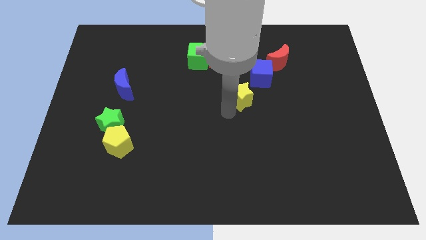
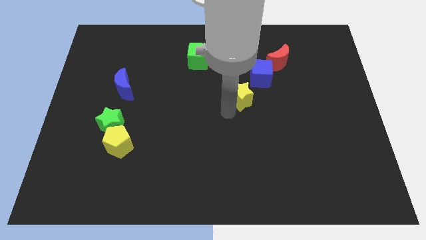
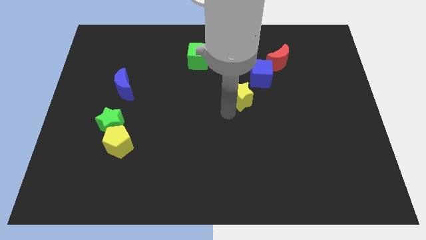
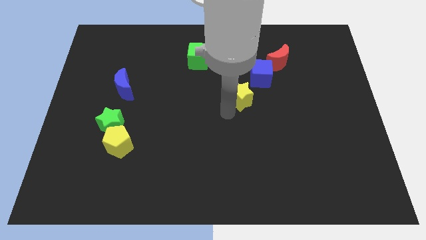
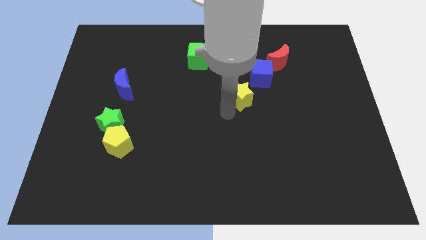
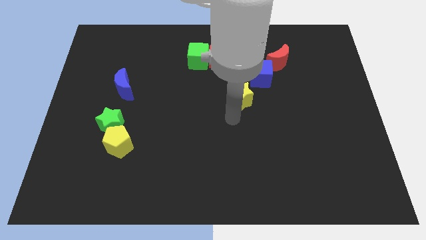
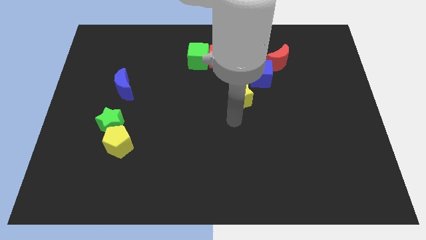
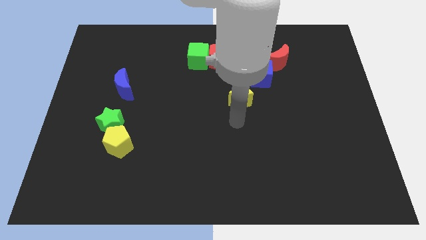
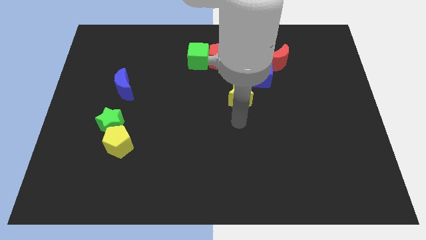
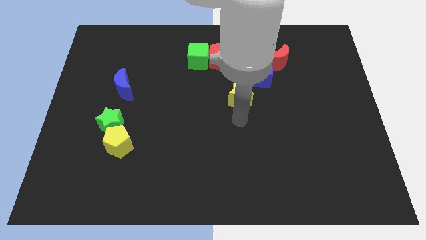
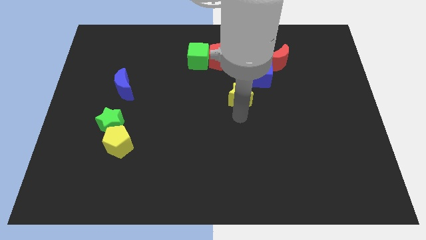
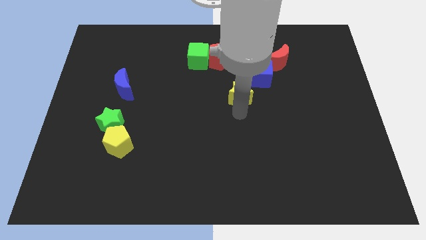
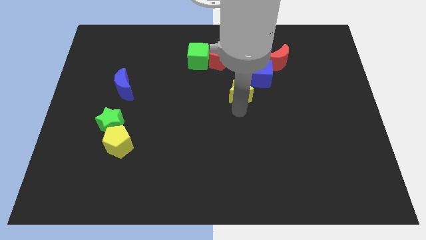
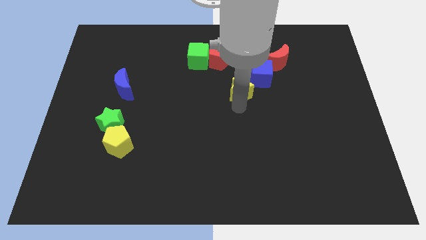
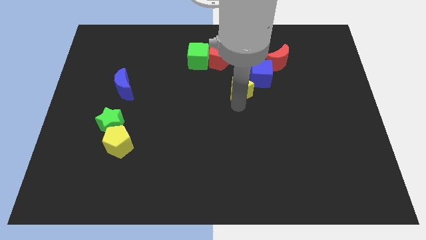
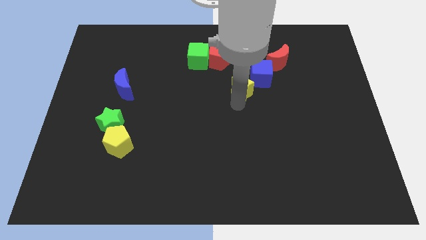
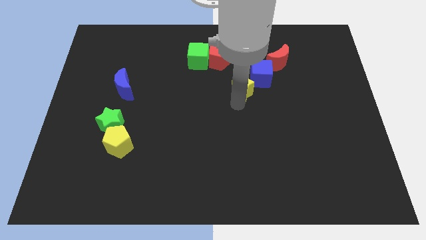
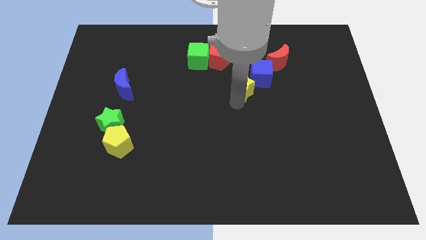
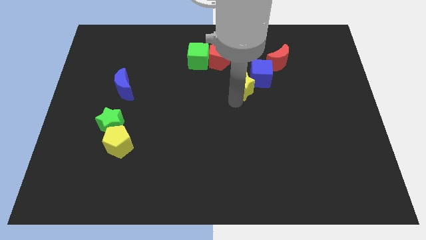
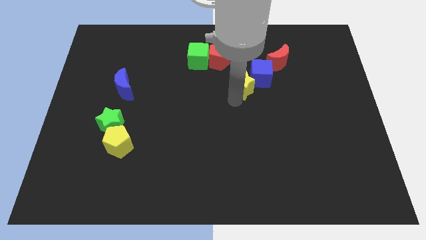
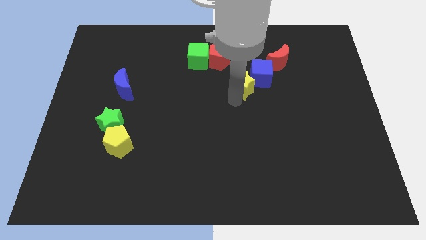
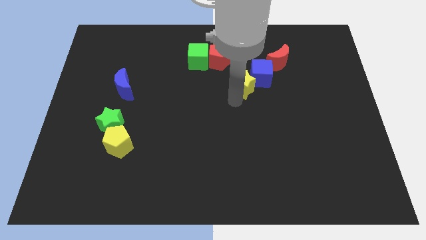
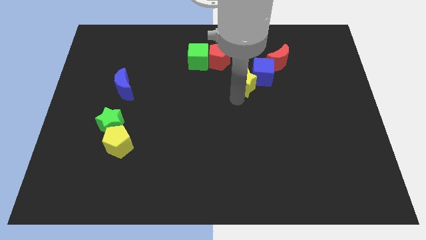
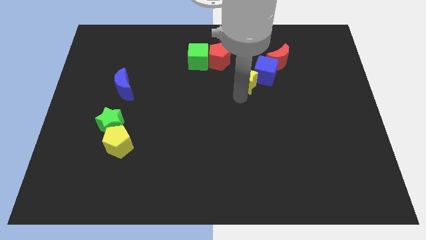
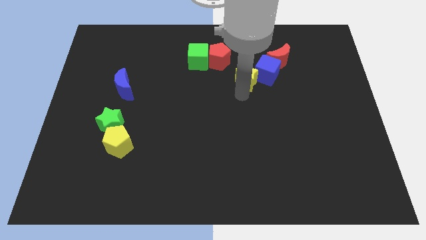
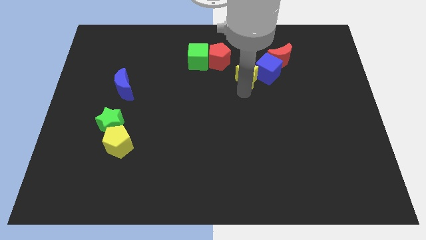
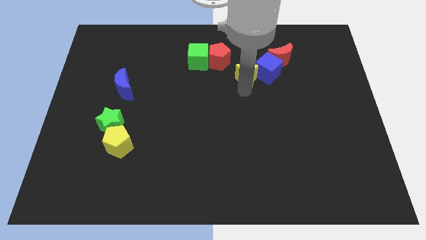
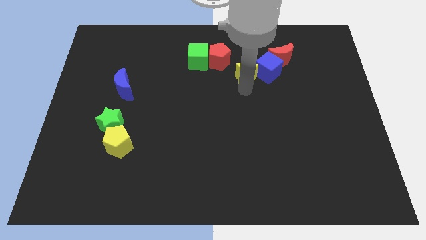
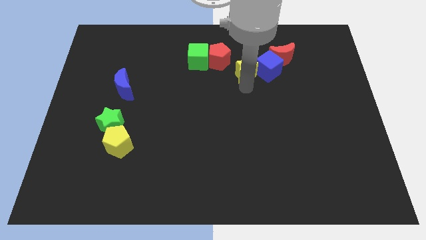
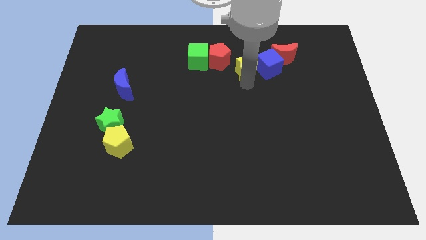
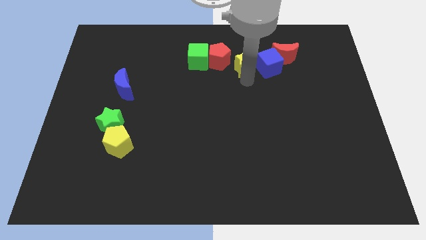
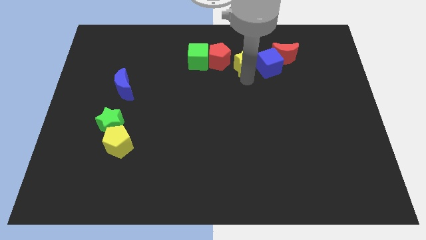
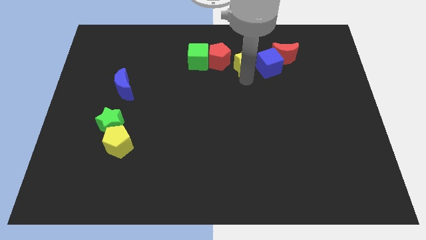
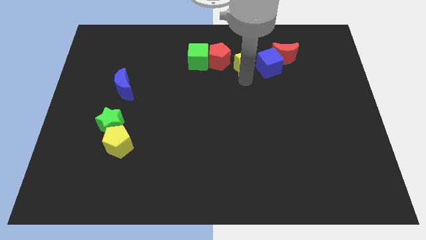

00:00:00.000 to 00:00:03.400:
push the yellow star to the left side of the blue cube

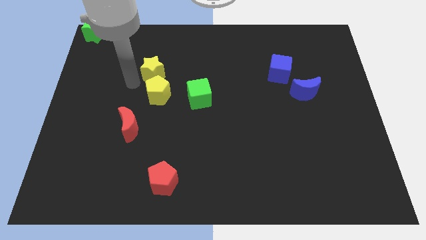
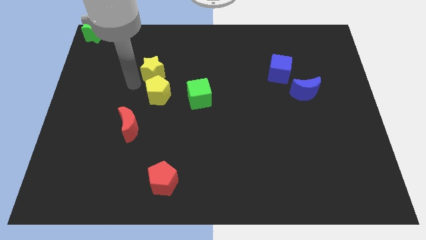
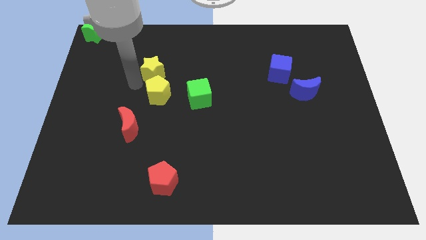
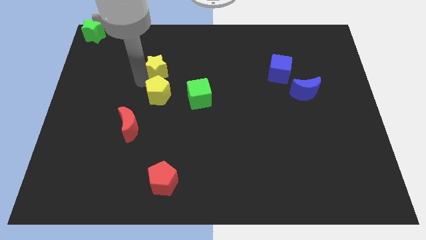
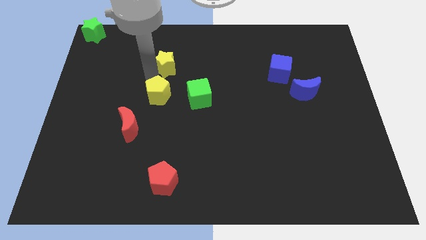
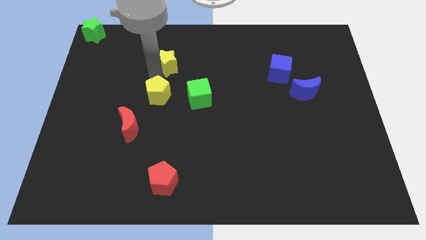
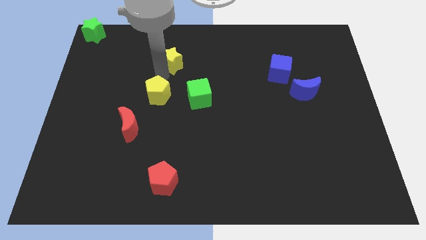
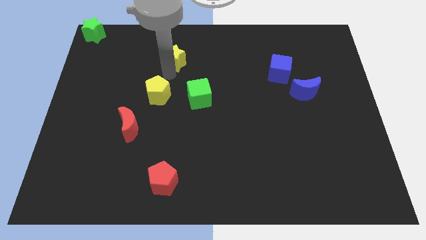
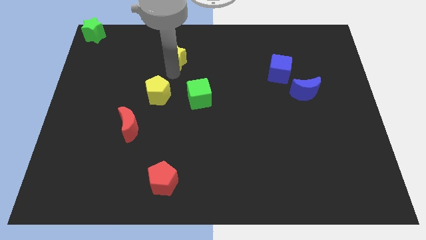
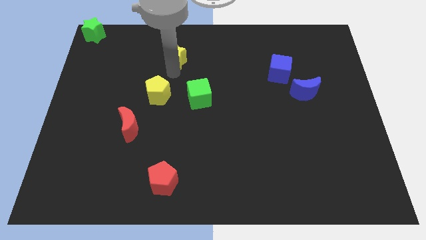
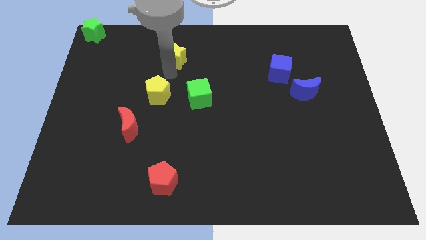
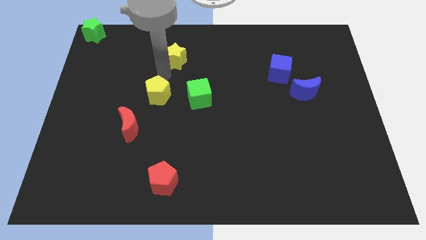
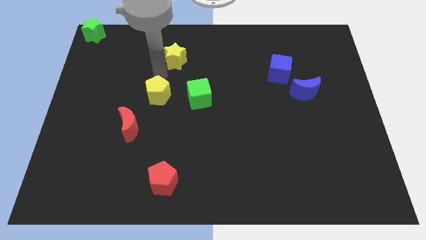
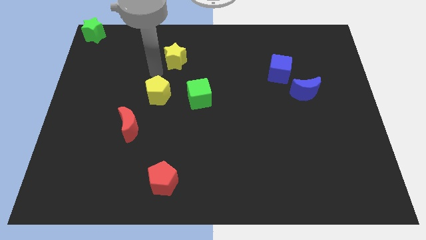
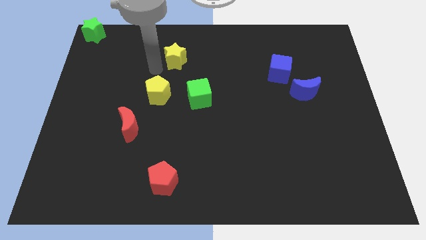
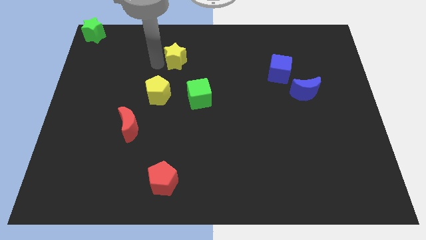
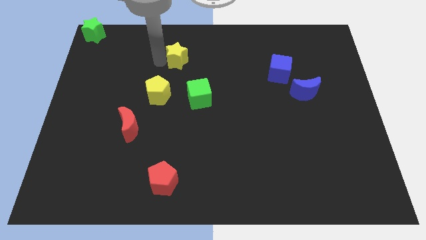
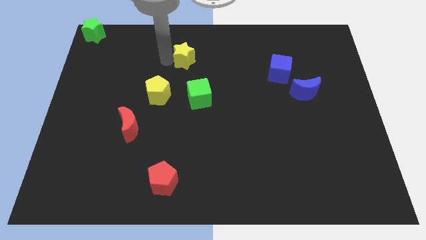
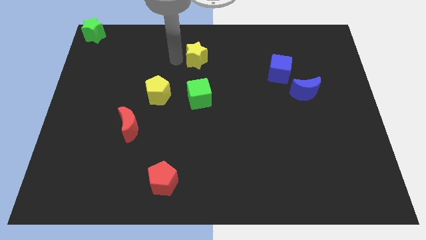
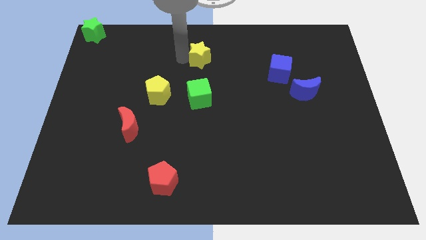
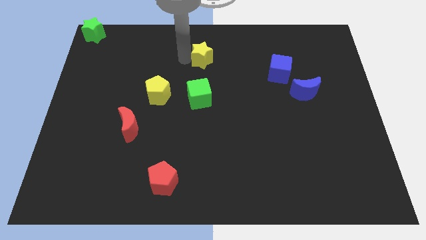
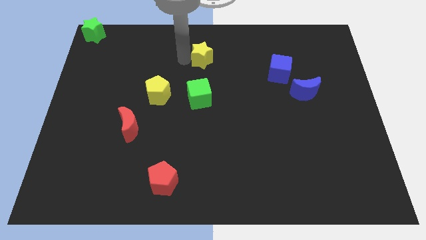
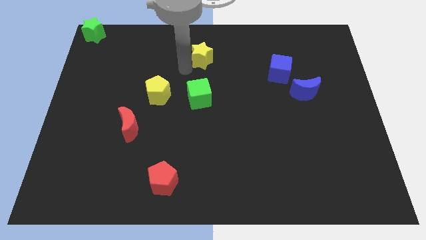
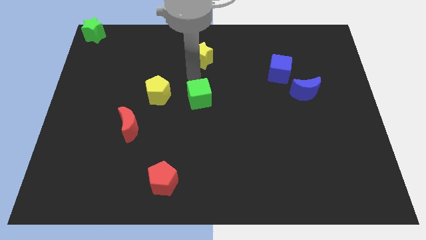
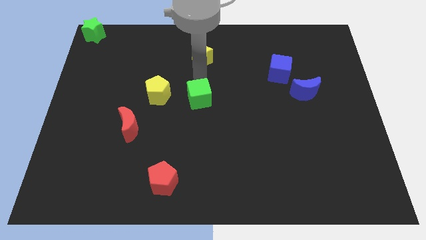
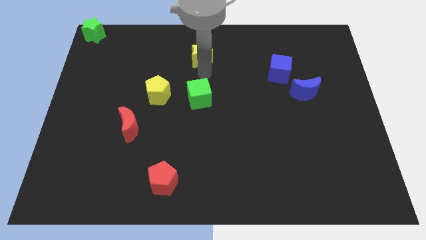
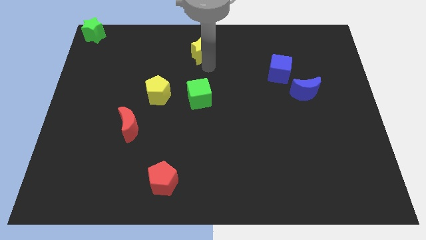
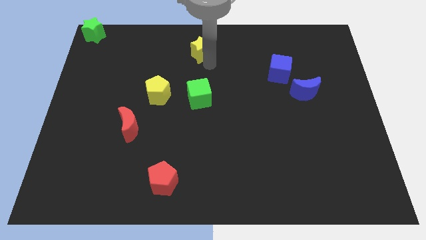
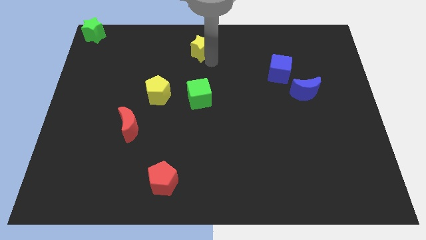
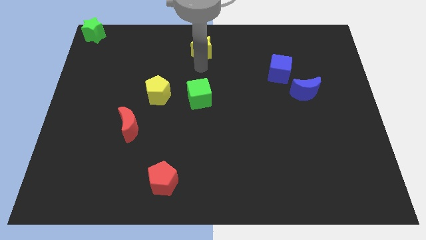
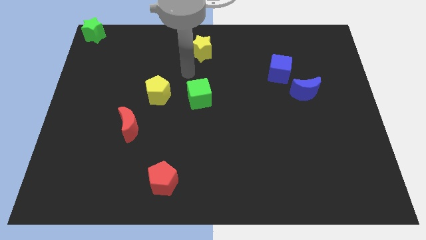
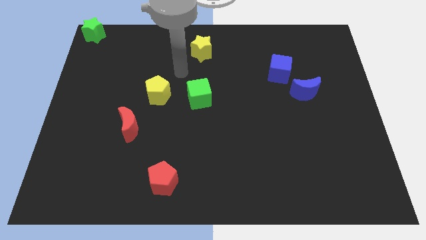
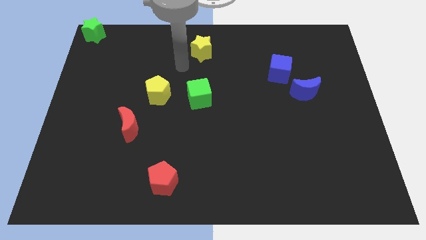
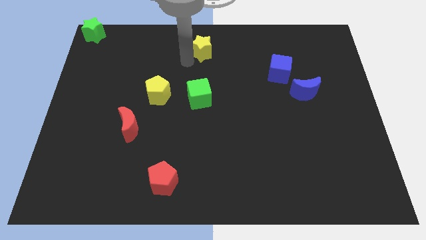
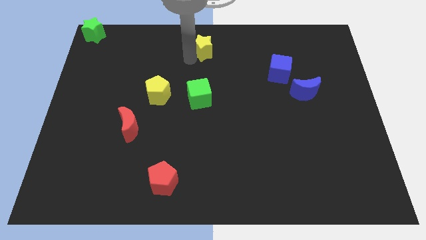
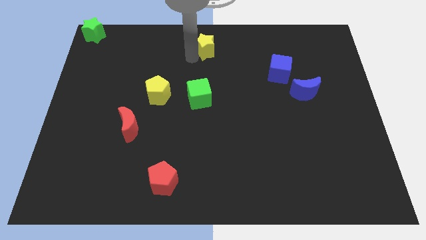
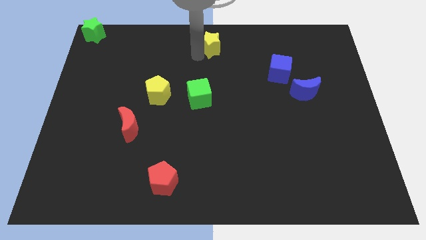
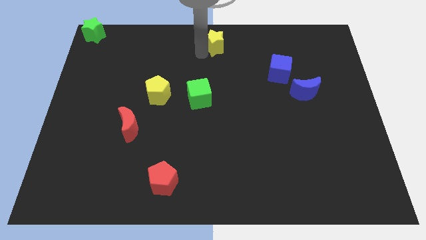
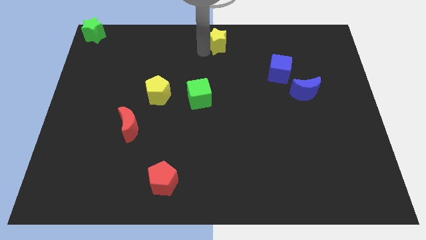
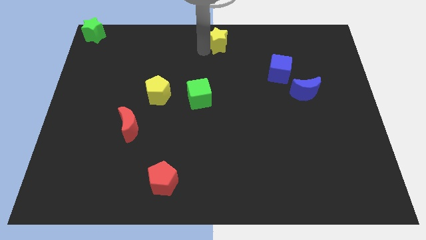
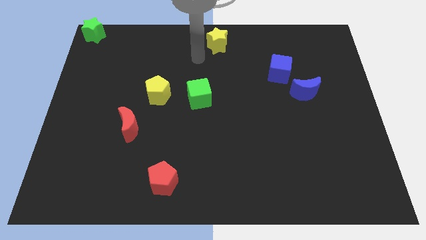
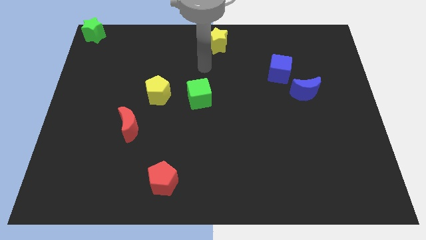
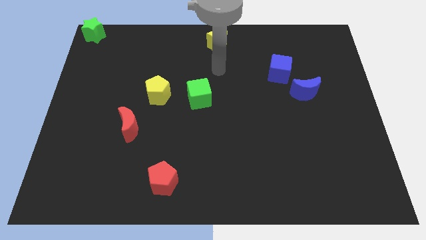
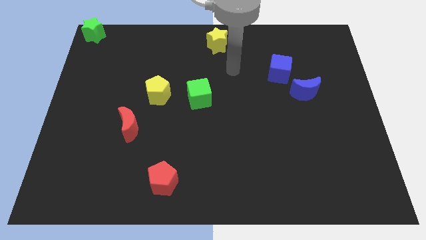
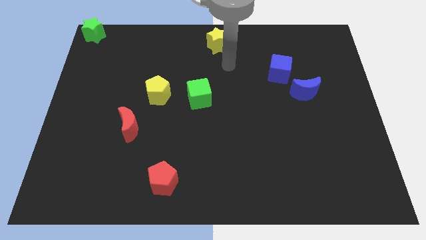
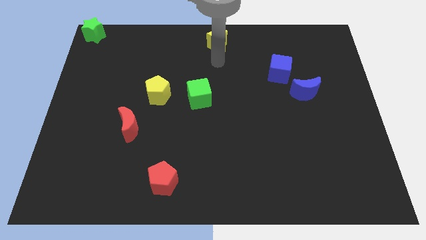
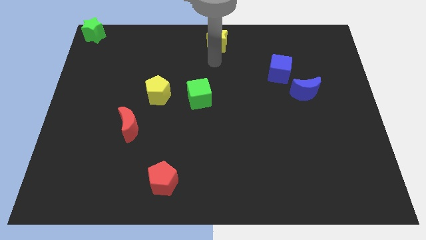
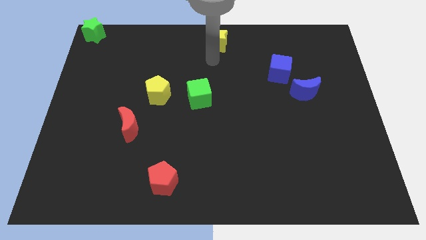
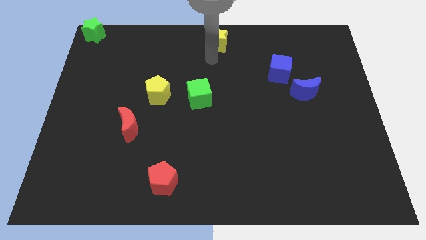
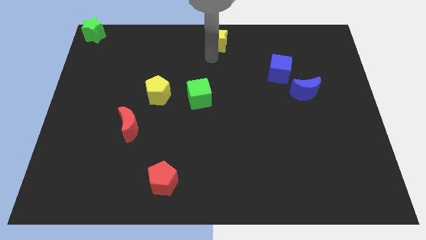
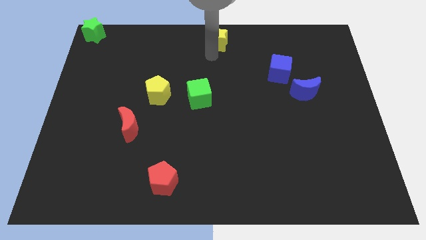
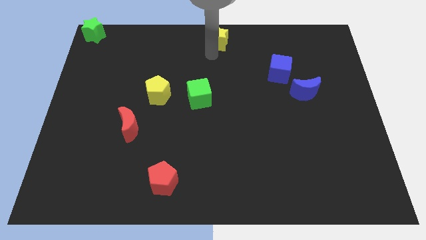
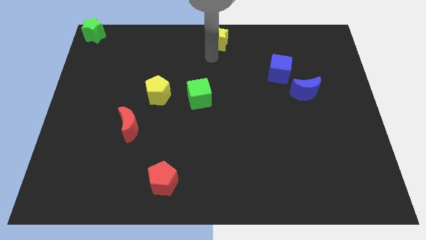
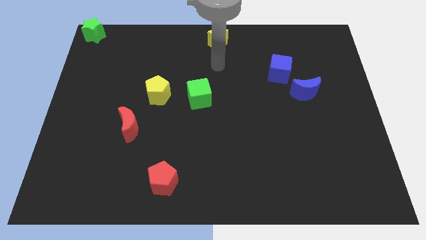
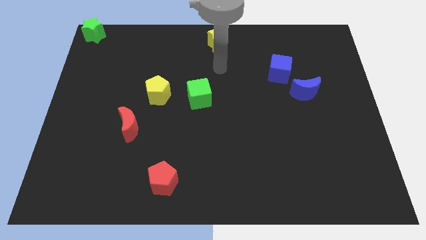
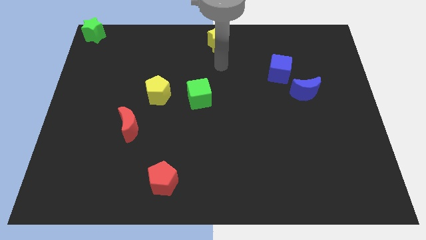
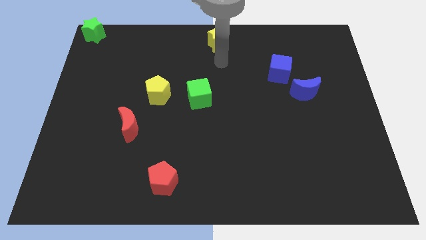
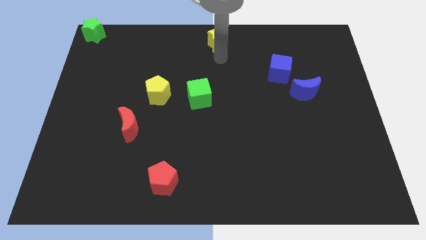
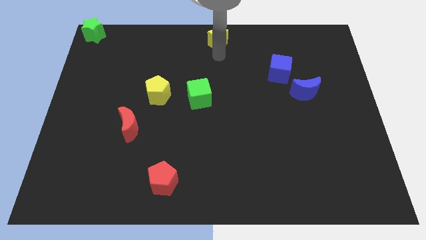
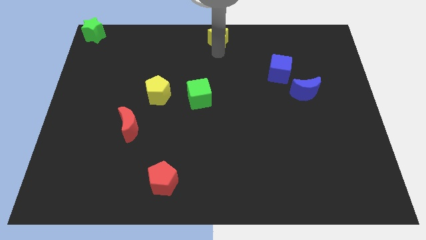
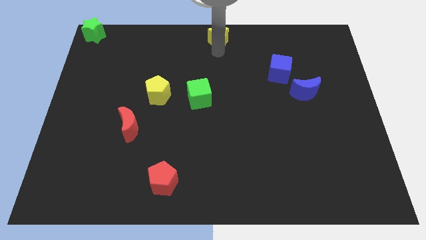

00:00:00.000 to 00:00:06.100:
place the yellow star diagonally to blue cube
